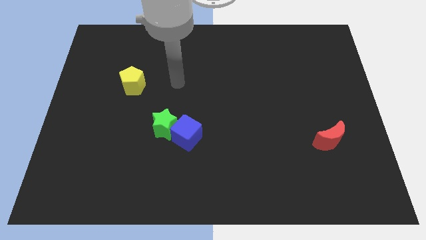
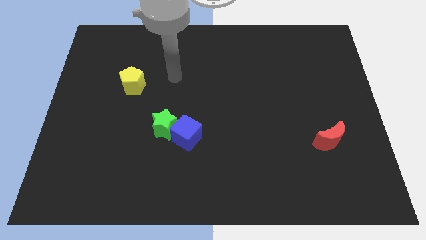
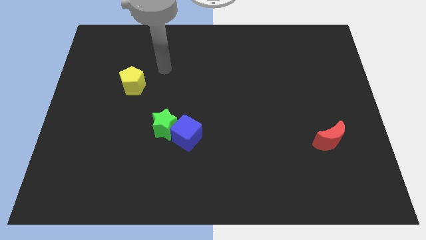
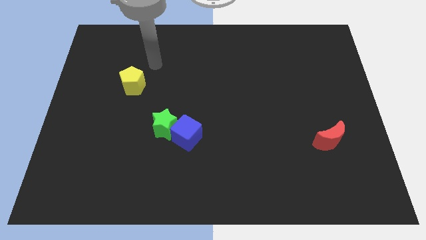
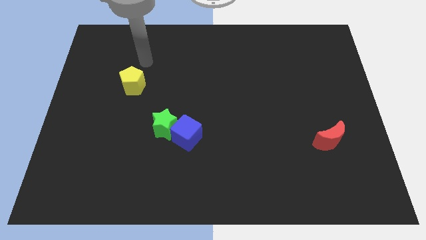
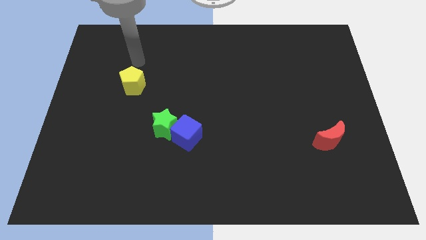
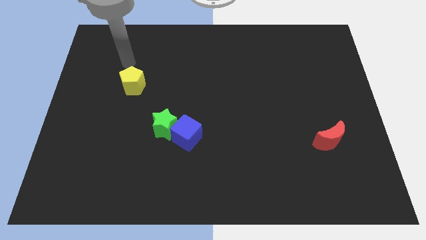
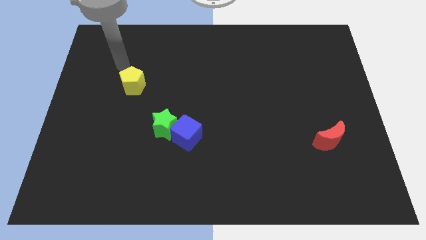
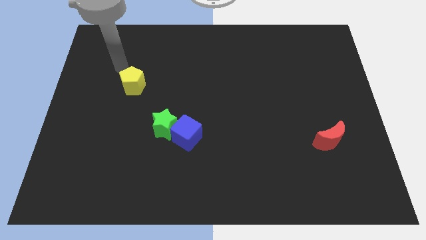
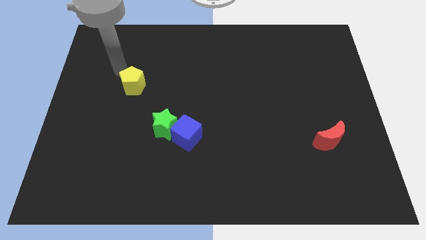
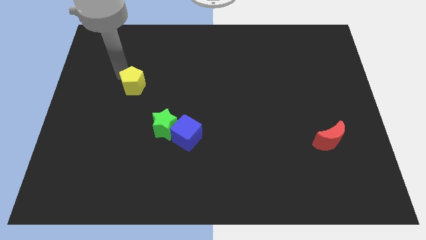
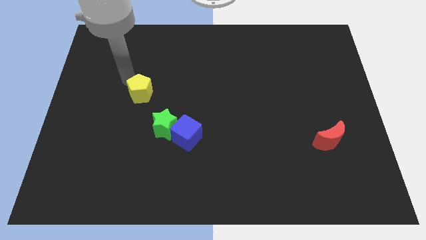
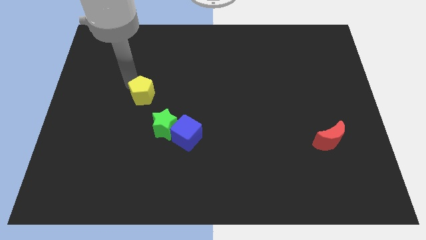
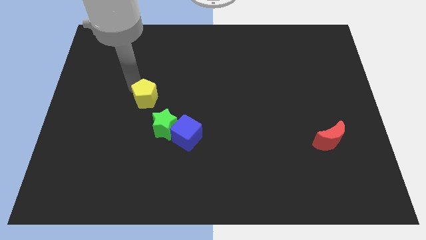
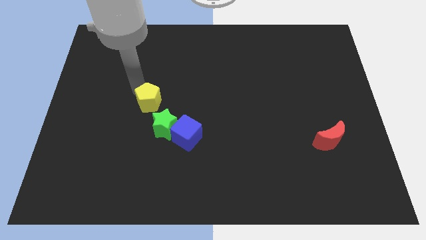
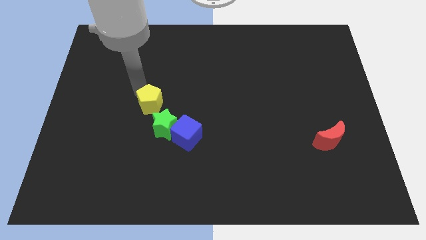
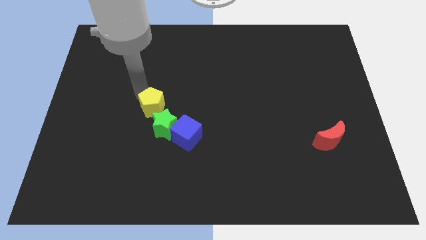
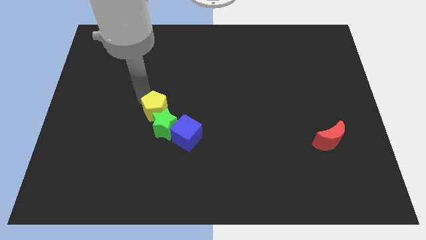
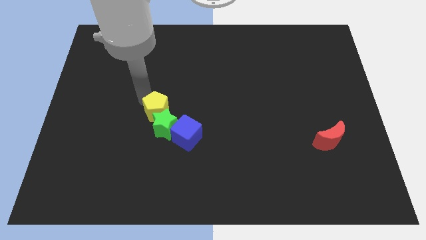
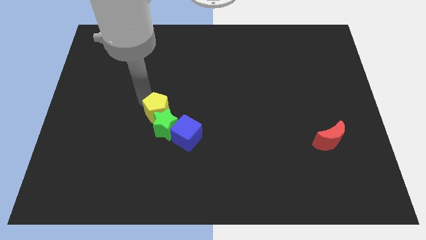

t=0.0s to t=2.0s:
move the yellow block towards the green star

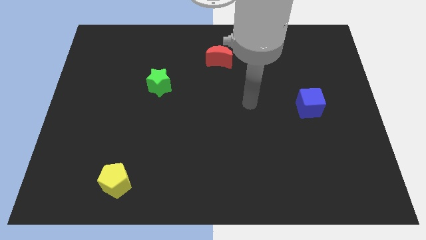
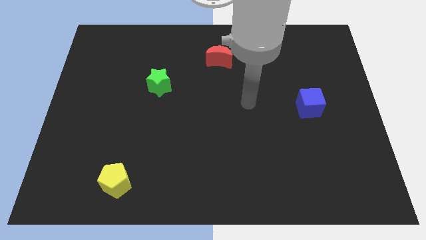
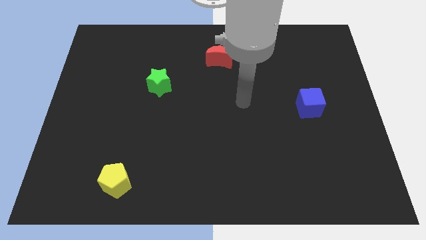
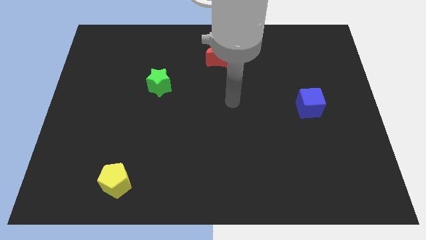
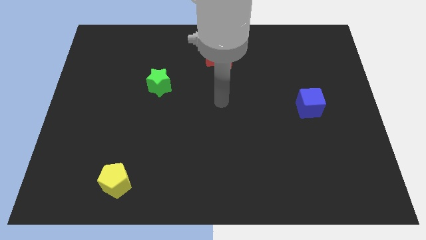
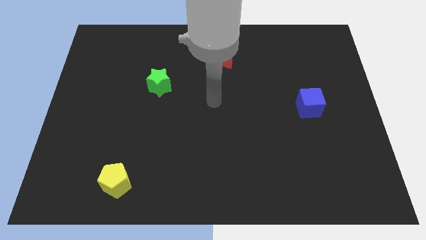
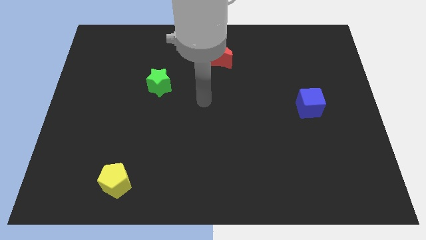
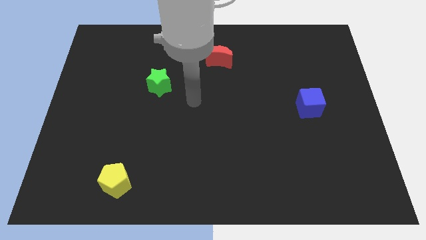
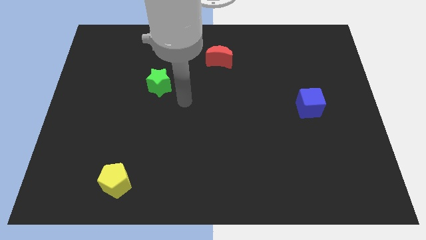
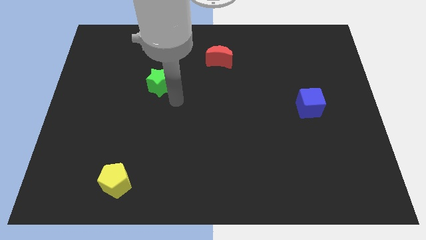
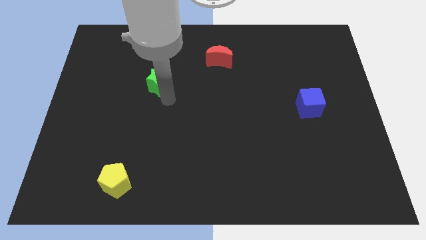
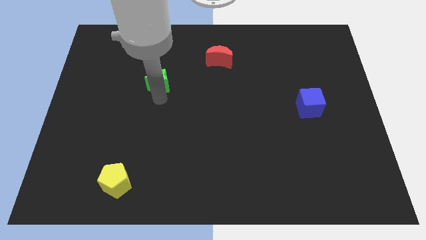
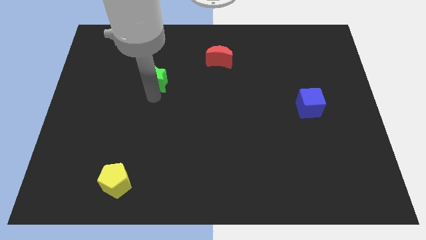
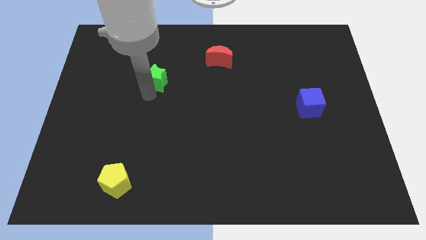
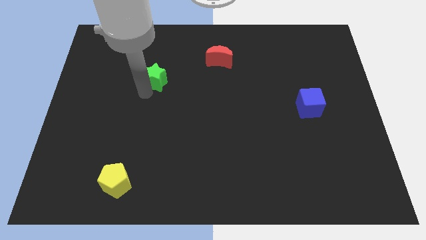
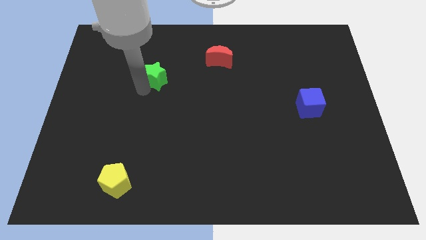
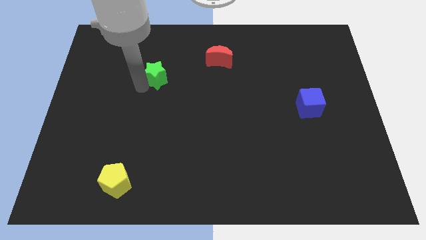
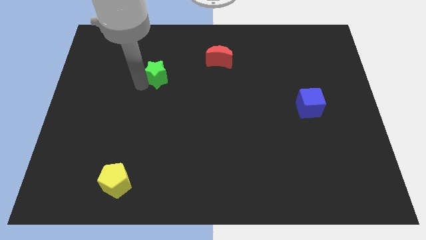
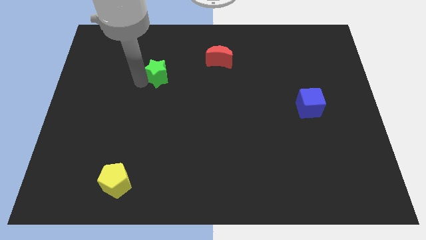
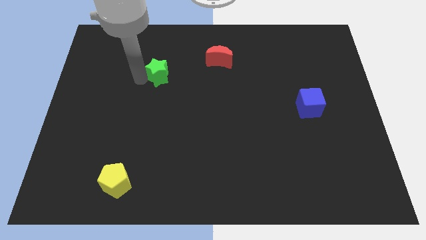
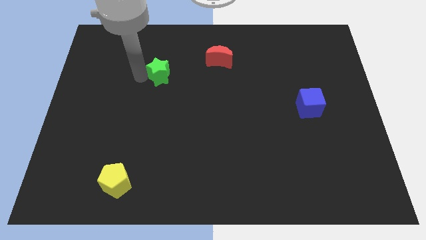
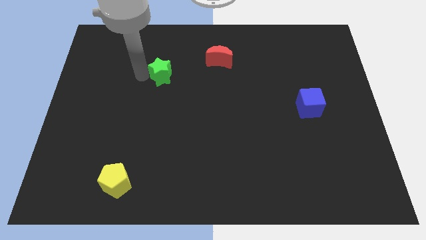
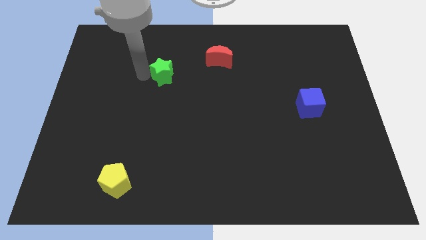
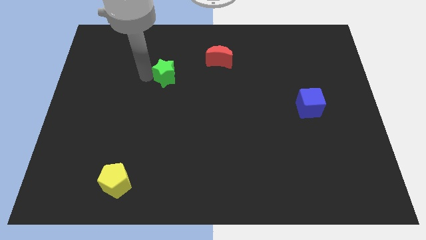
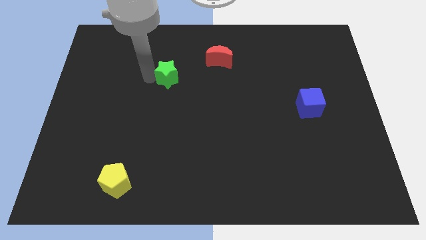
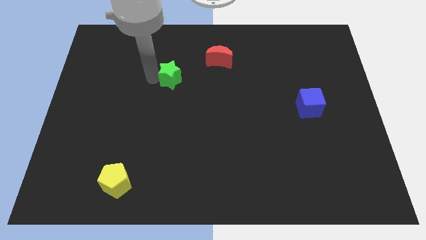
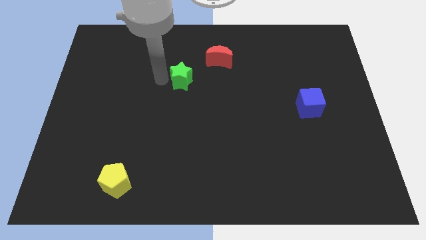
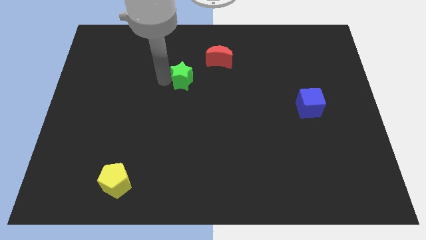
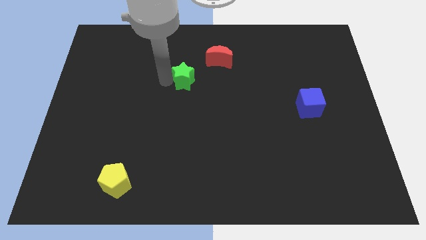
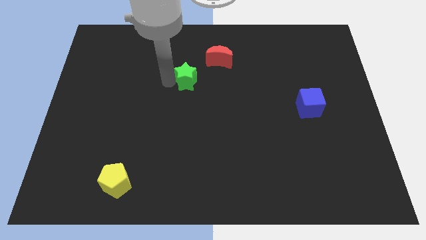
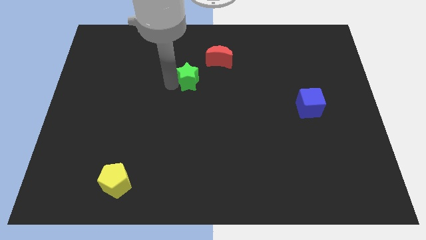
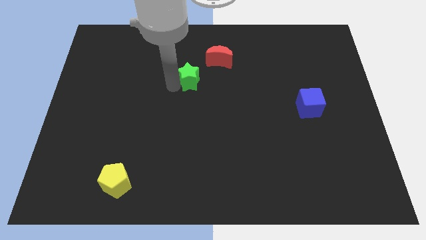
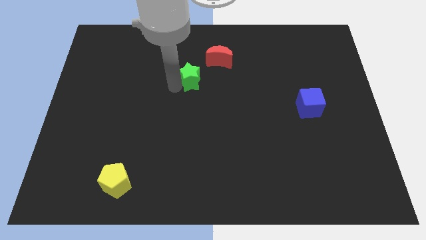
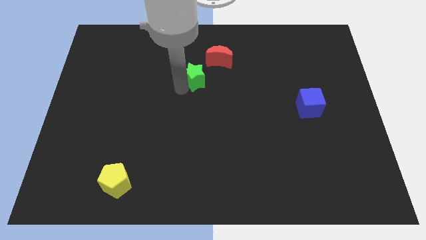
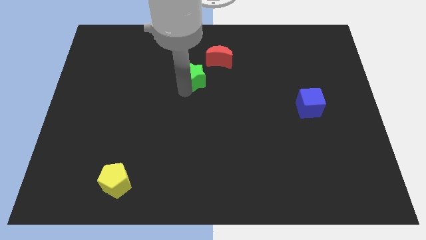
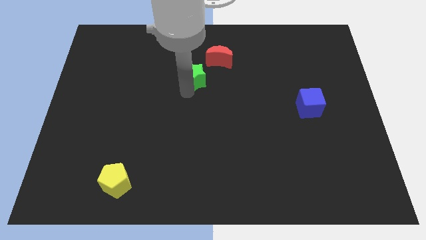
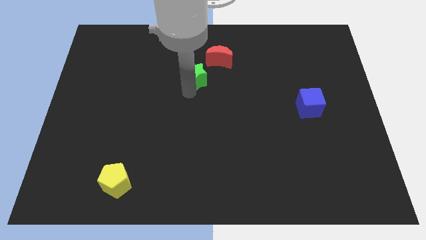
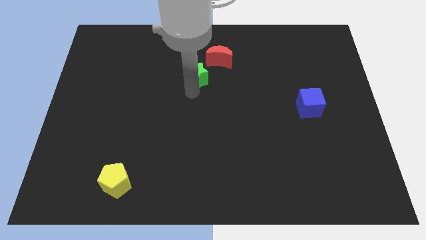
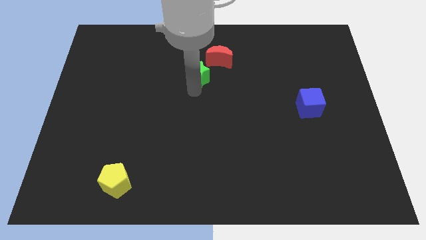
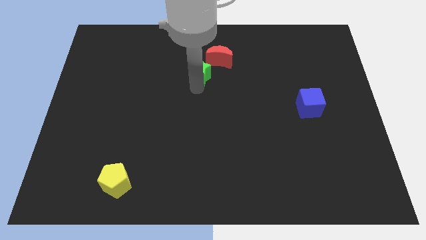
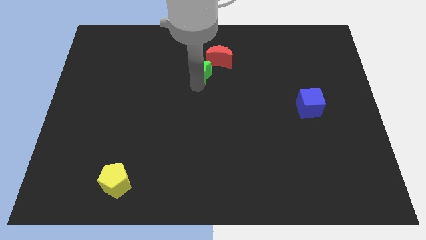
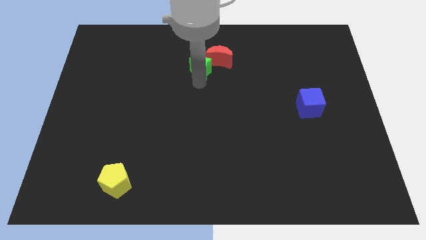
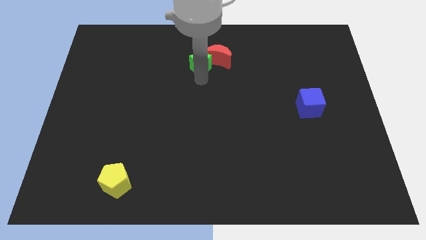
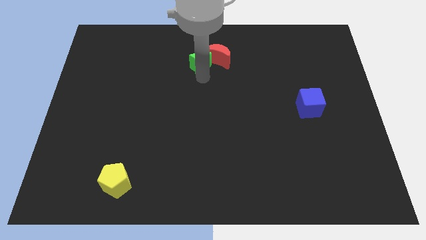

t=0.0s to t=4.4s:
slide the green block close to the red block

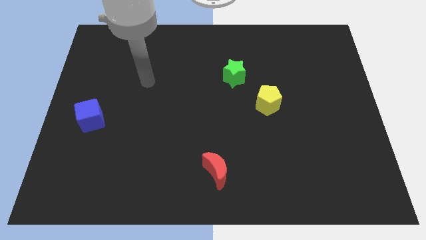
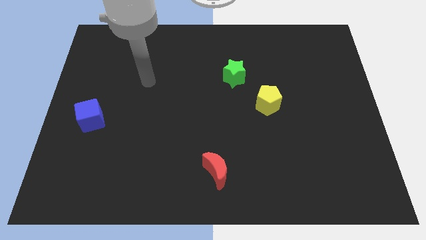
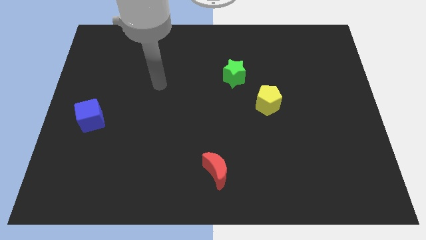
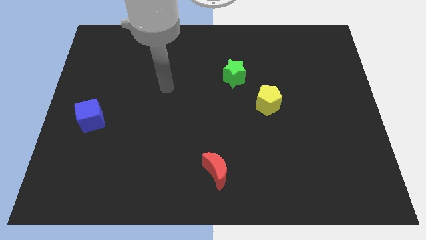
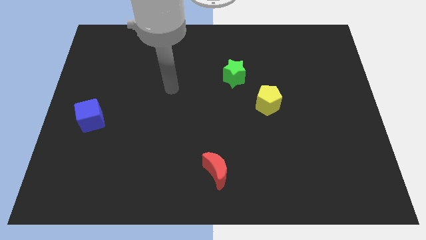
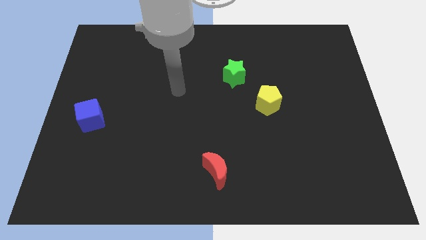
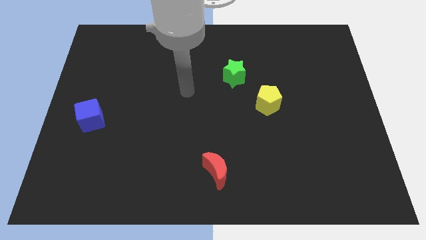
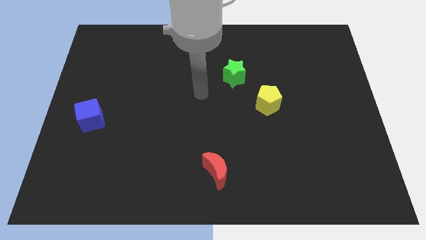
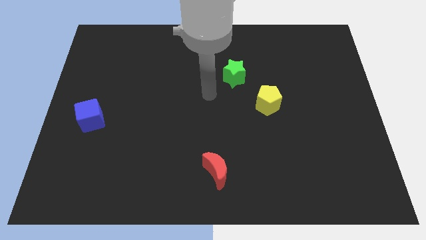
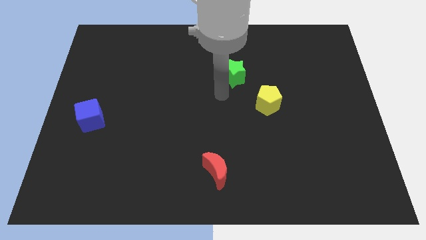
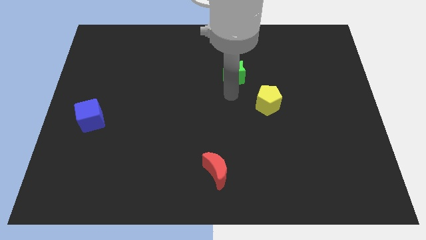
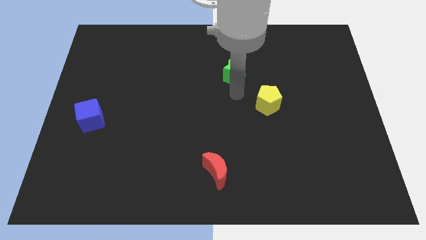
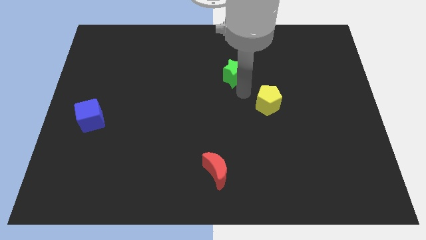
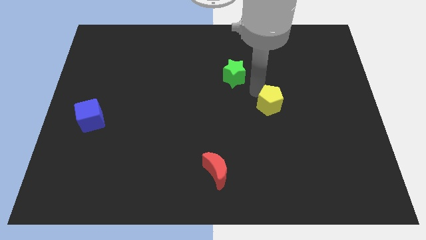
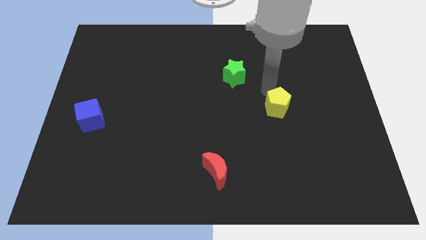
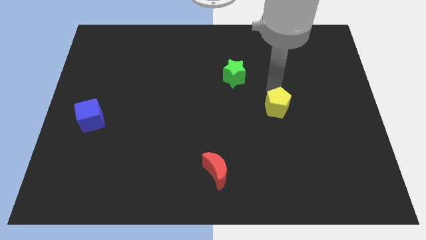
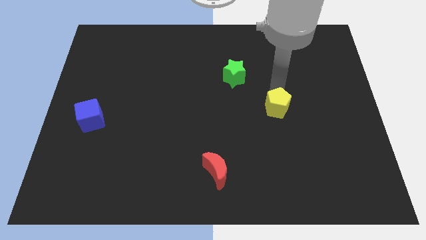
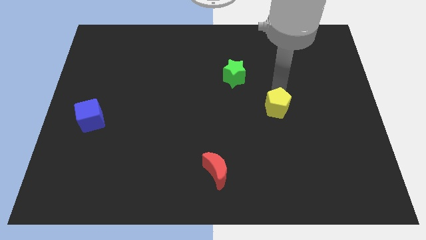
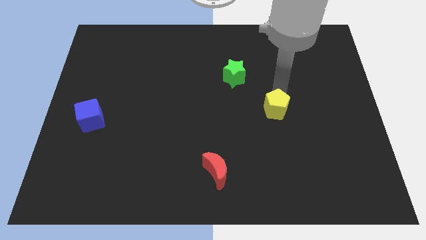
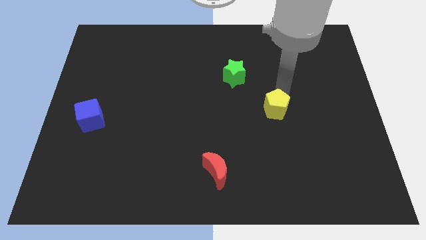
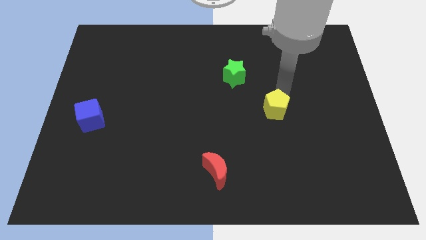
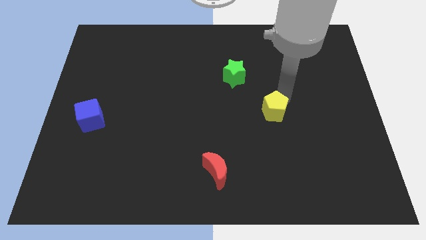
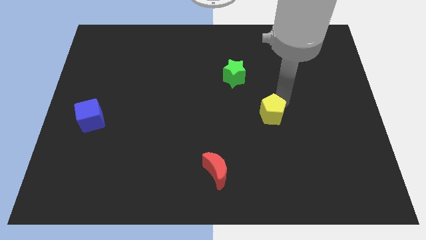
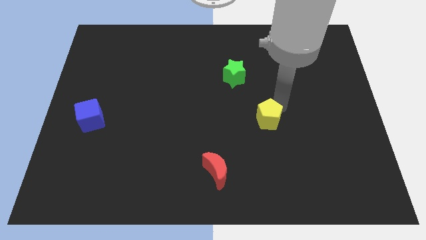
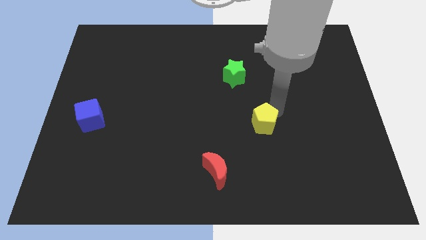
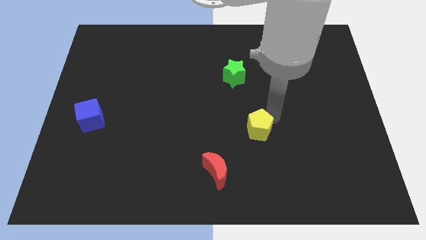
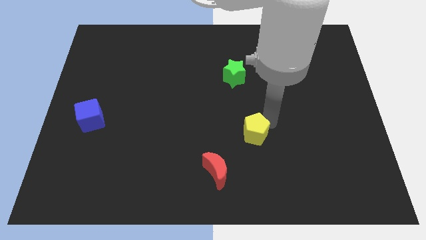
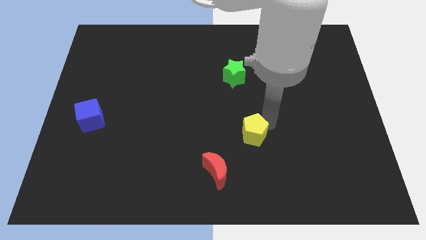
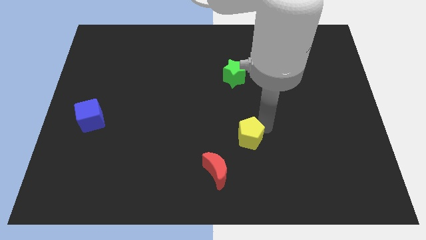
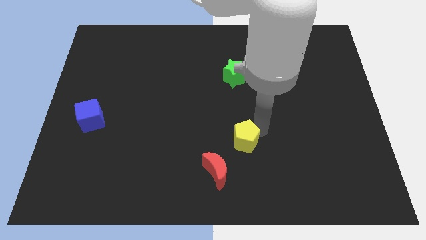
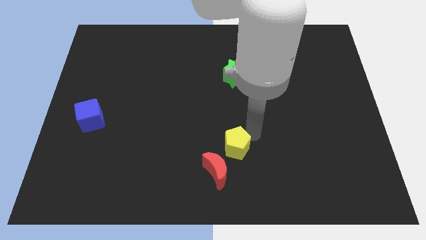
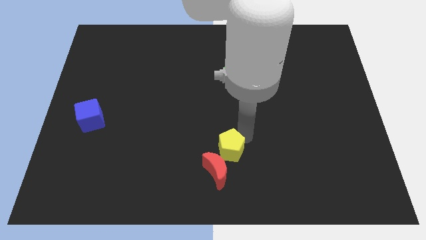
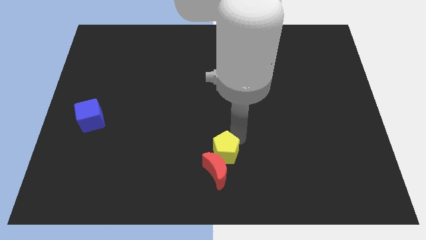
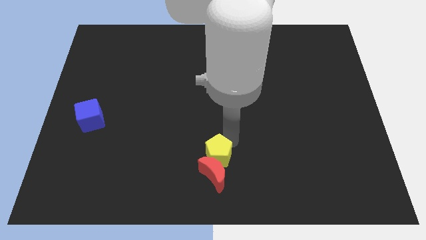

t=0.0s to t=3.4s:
push the yellow block close to the red moon
